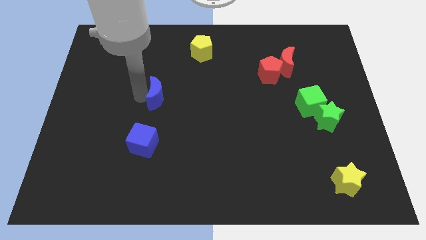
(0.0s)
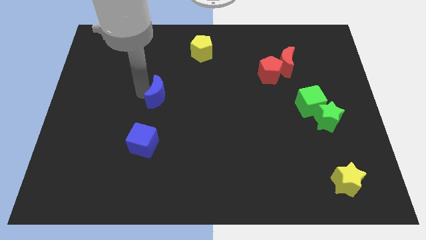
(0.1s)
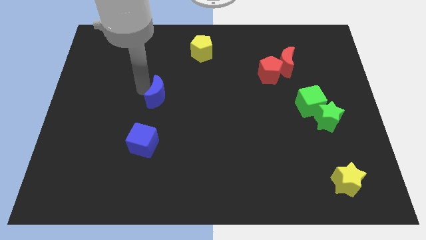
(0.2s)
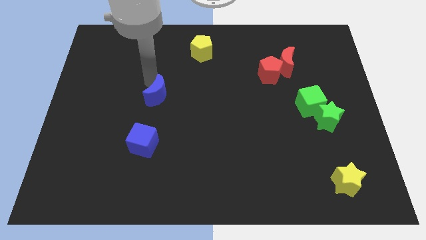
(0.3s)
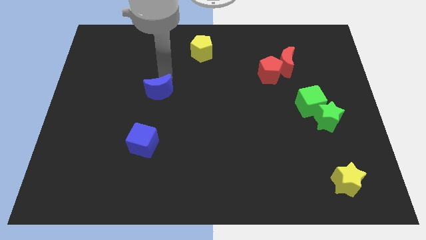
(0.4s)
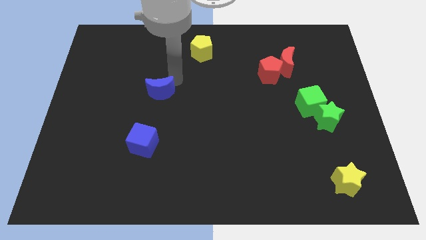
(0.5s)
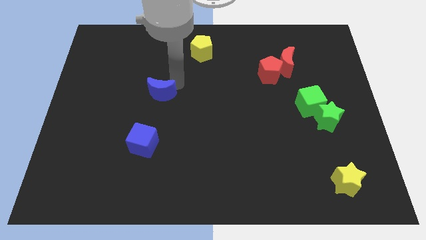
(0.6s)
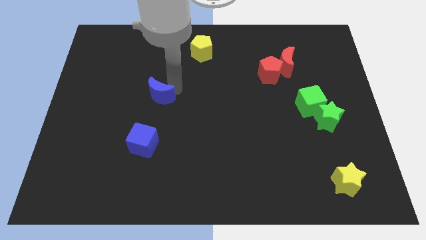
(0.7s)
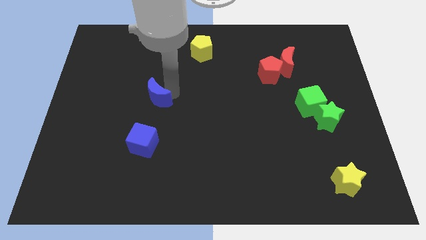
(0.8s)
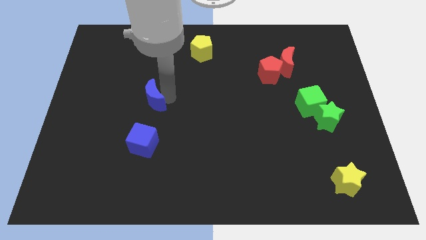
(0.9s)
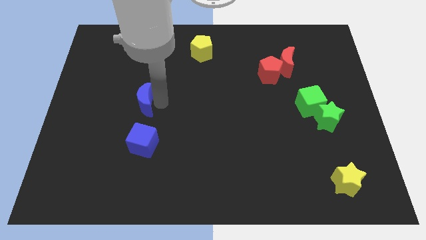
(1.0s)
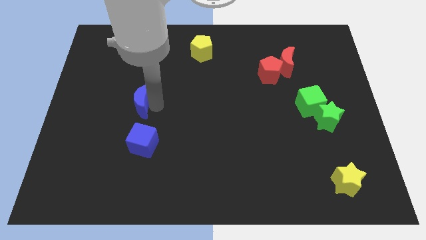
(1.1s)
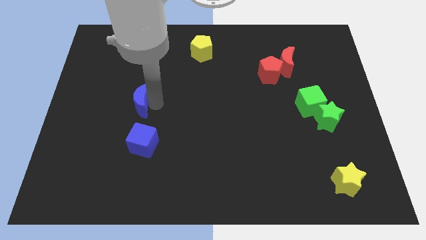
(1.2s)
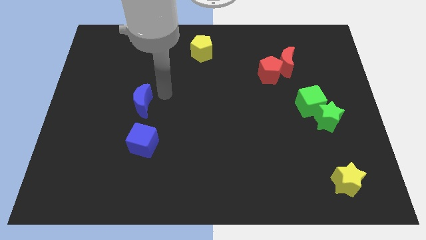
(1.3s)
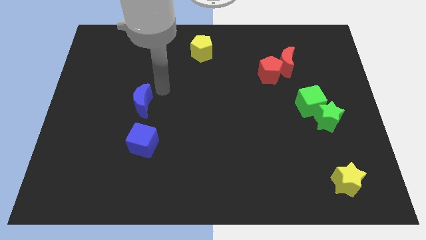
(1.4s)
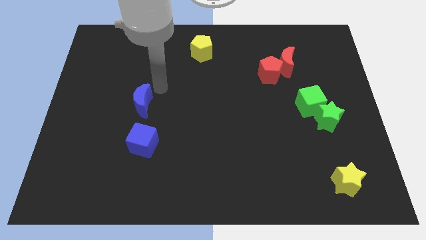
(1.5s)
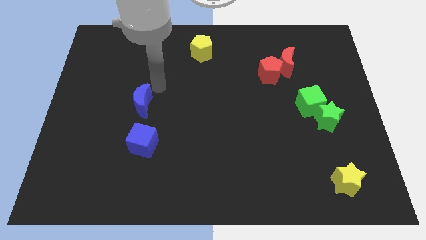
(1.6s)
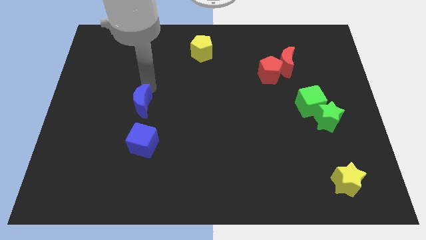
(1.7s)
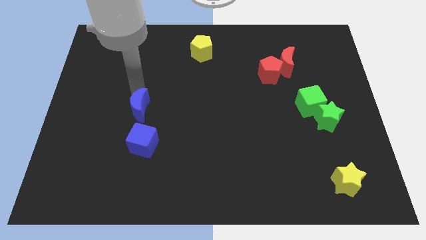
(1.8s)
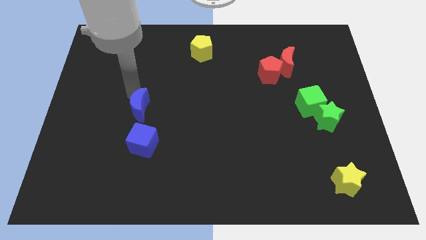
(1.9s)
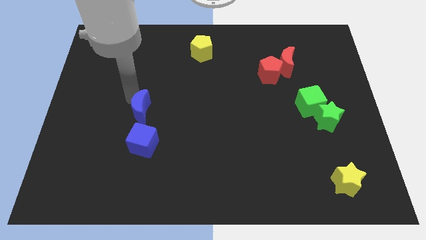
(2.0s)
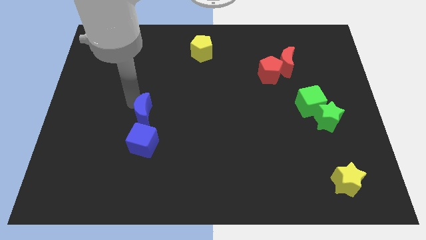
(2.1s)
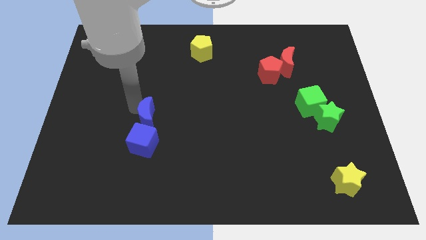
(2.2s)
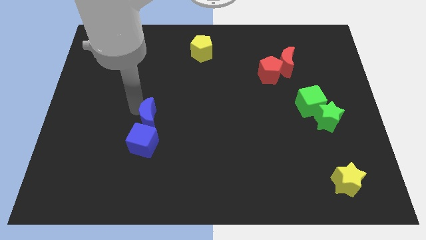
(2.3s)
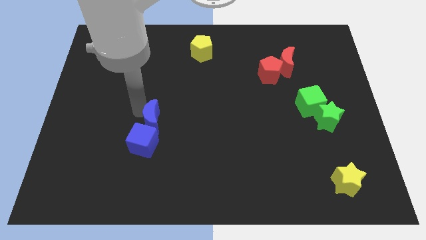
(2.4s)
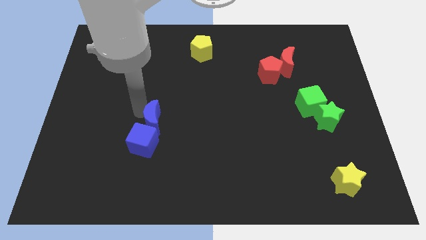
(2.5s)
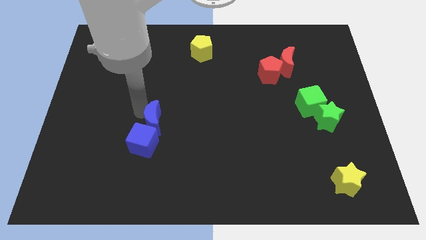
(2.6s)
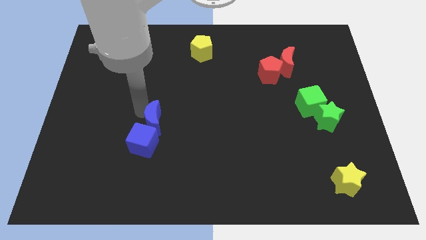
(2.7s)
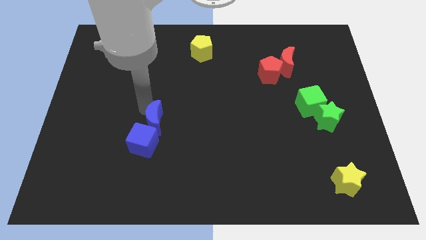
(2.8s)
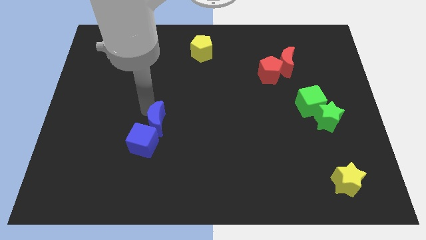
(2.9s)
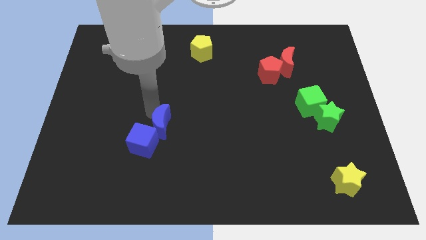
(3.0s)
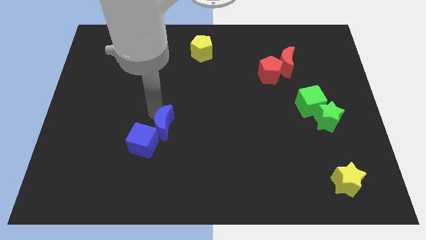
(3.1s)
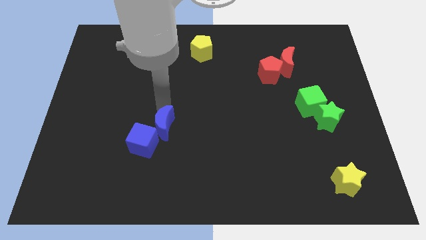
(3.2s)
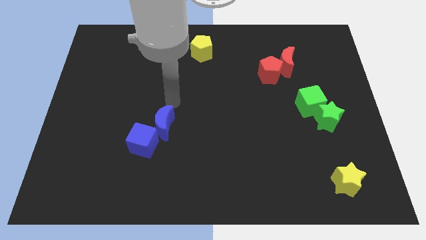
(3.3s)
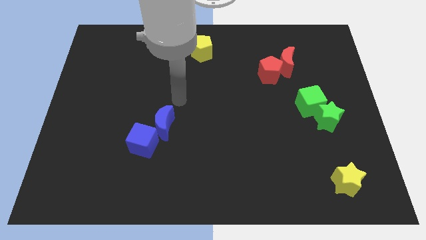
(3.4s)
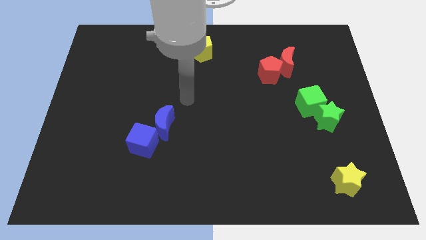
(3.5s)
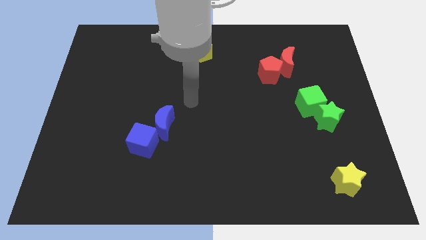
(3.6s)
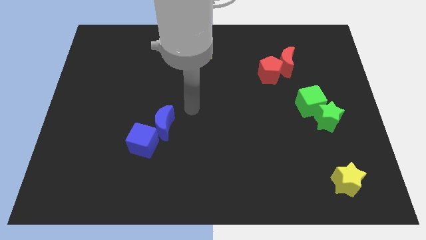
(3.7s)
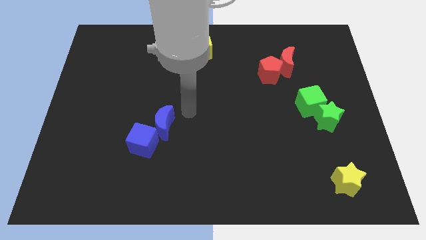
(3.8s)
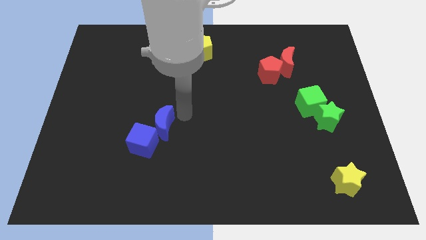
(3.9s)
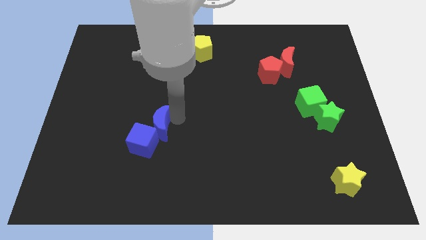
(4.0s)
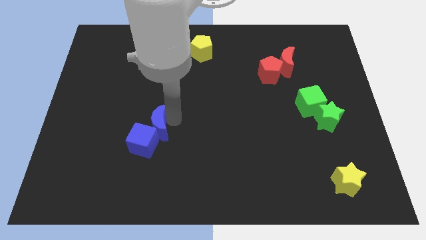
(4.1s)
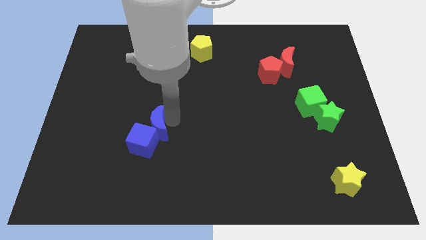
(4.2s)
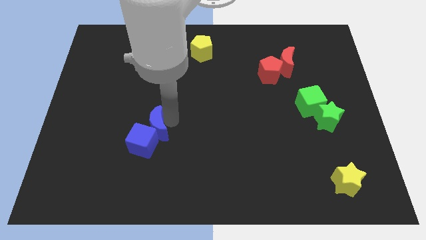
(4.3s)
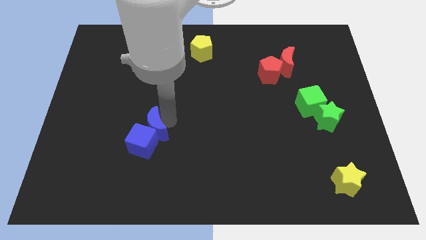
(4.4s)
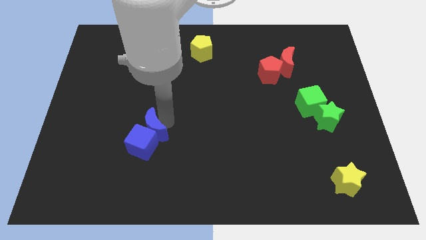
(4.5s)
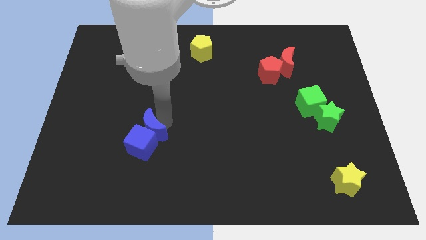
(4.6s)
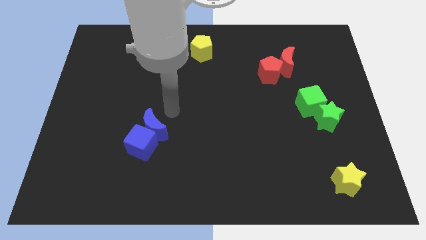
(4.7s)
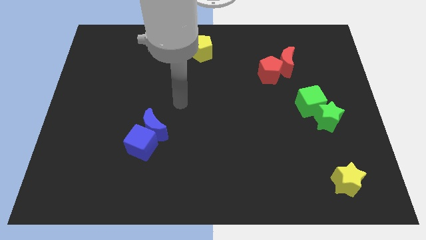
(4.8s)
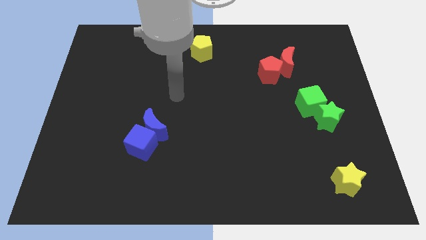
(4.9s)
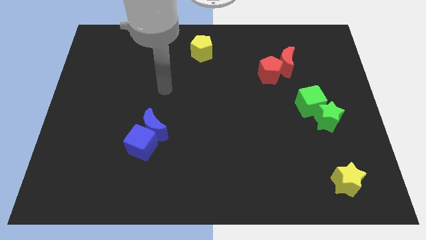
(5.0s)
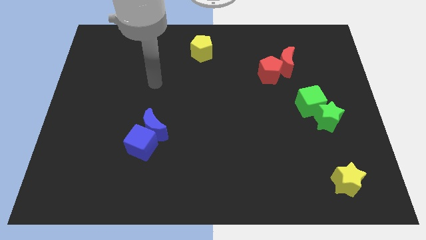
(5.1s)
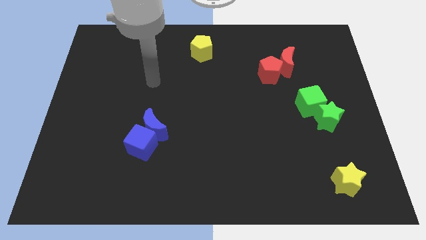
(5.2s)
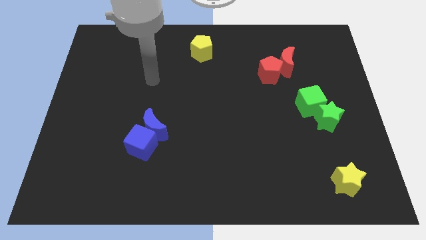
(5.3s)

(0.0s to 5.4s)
push the blue crescent into the blue cube

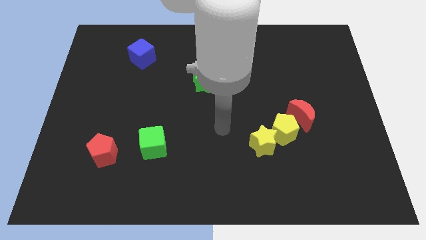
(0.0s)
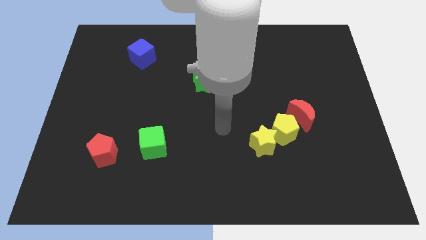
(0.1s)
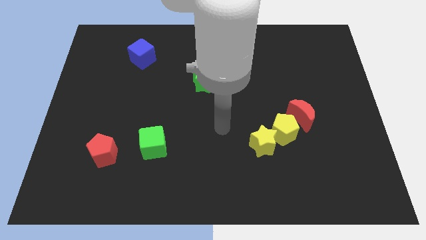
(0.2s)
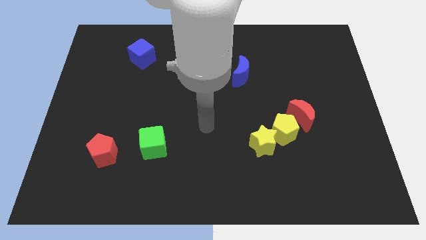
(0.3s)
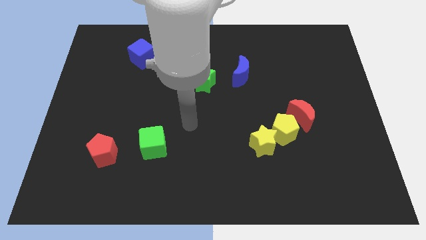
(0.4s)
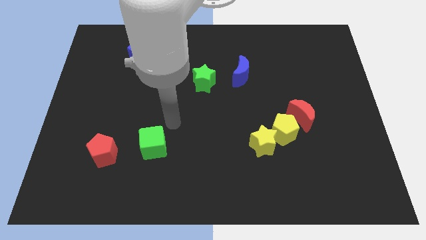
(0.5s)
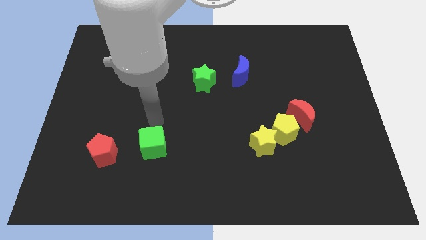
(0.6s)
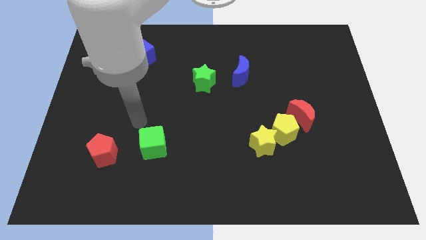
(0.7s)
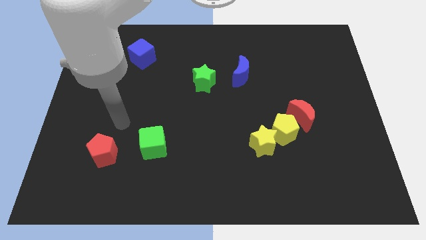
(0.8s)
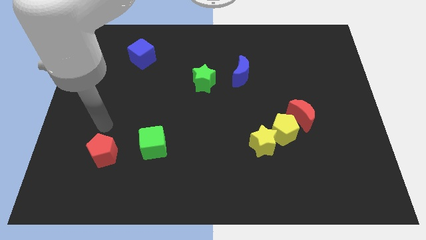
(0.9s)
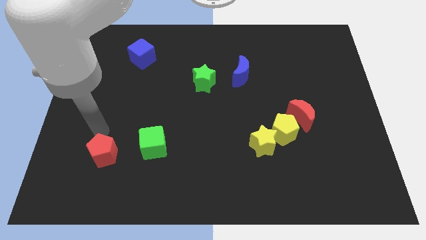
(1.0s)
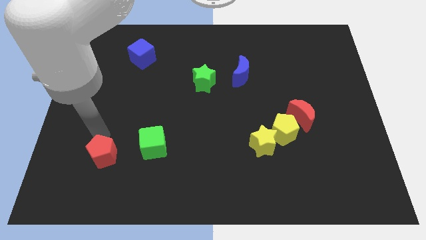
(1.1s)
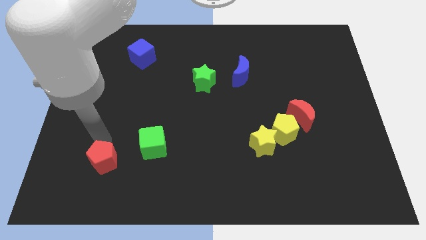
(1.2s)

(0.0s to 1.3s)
tap the red pentagon

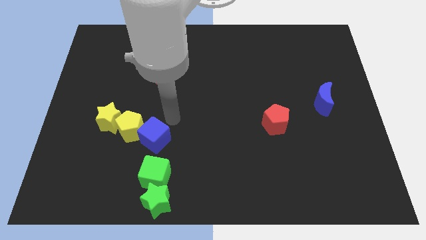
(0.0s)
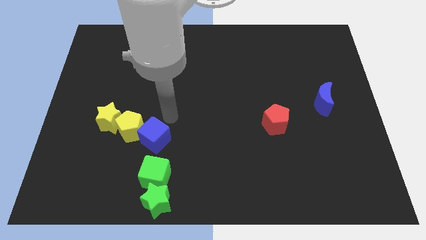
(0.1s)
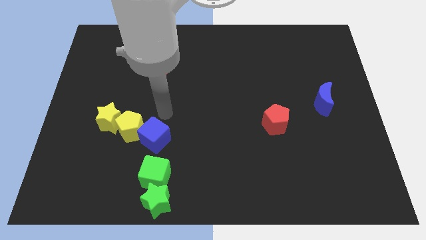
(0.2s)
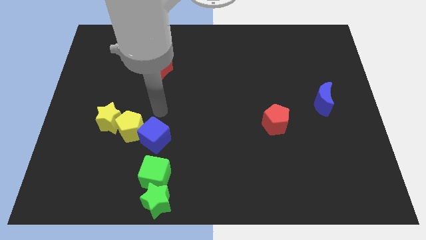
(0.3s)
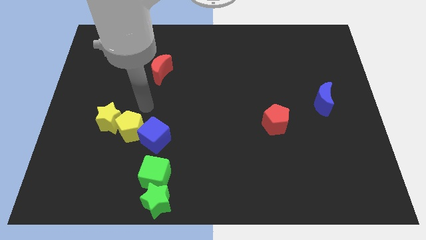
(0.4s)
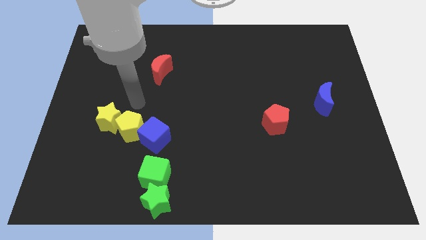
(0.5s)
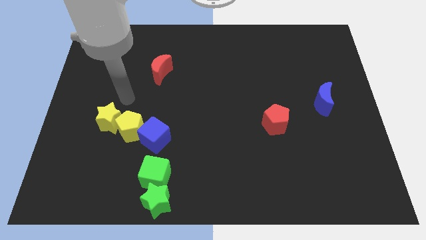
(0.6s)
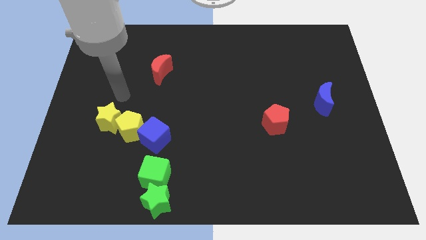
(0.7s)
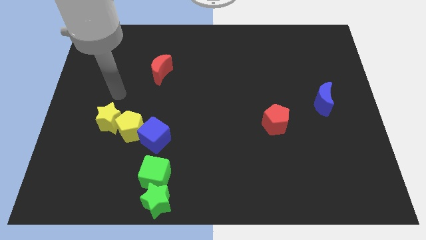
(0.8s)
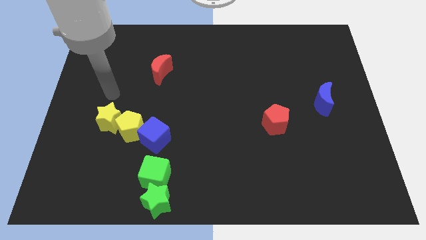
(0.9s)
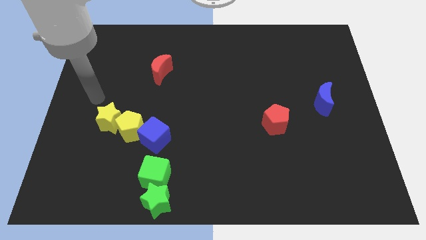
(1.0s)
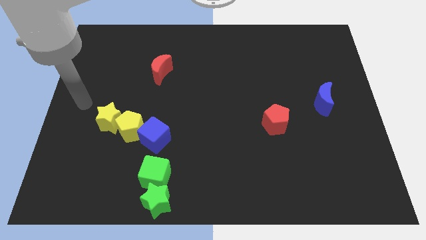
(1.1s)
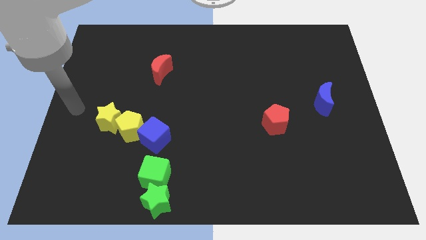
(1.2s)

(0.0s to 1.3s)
move the arm to the center left corner

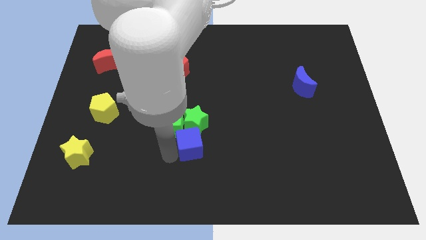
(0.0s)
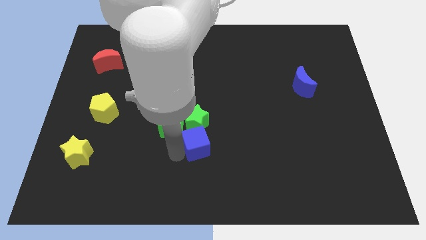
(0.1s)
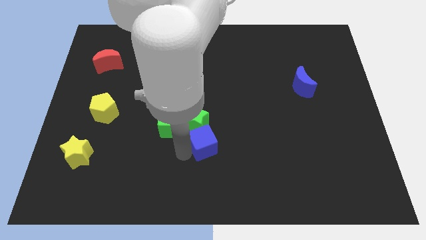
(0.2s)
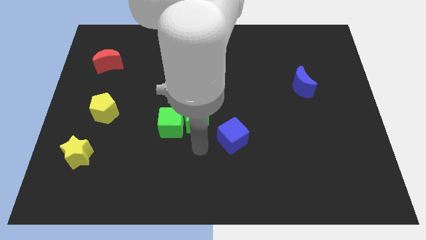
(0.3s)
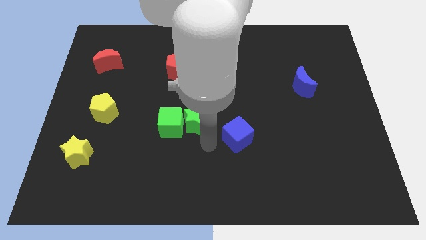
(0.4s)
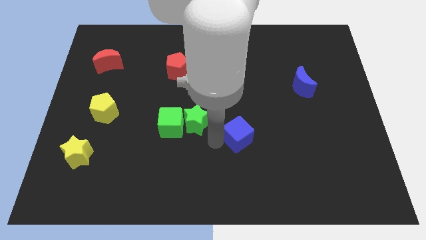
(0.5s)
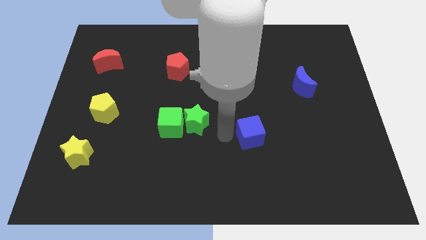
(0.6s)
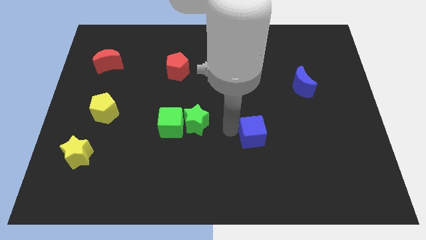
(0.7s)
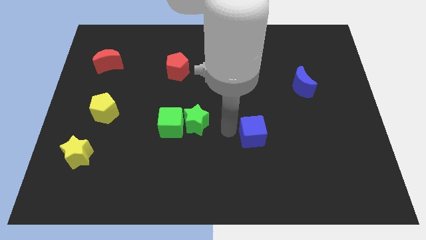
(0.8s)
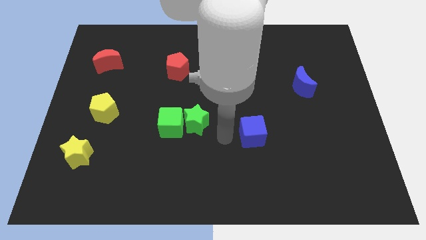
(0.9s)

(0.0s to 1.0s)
separate blue cube from green star
